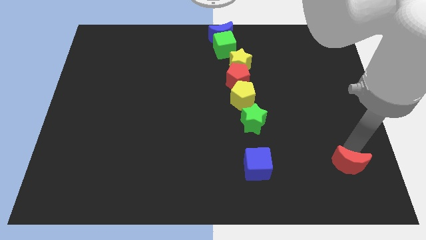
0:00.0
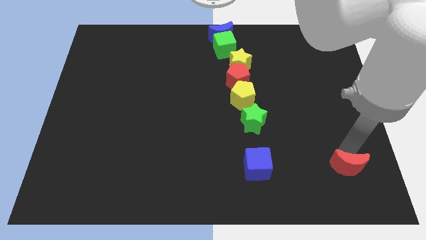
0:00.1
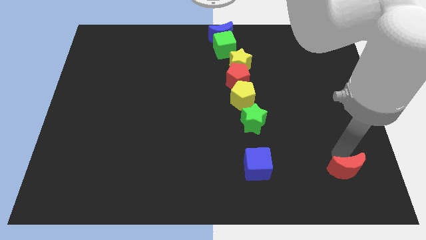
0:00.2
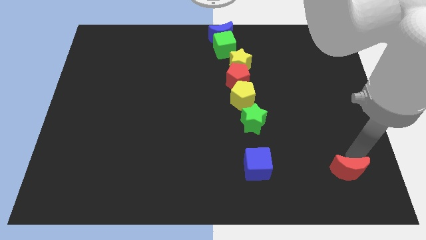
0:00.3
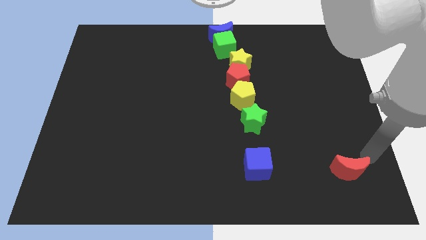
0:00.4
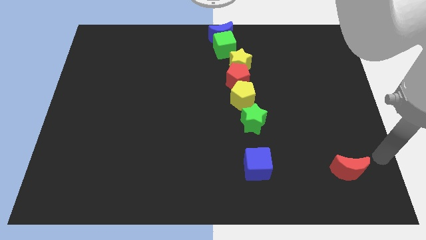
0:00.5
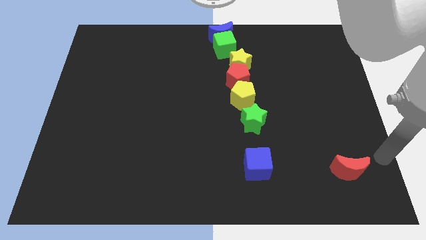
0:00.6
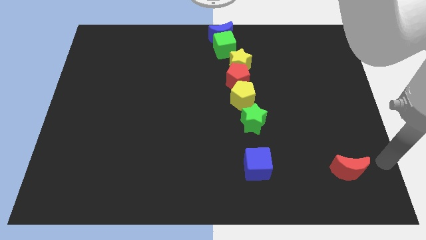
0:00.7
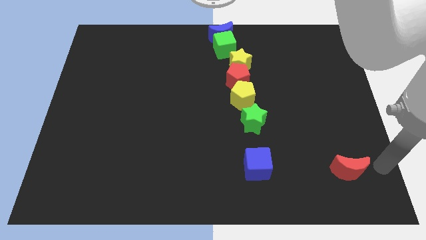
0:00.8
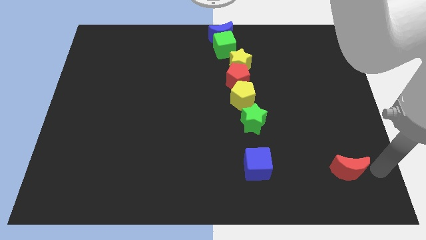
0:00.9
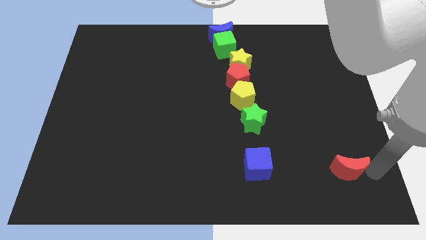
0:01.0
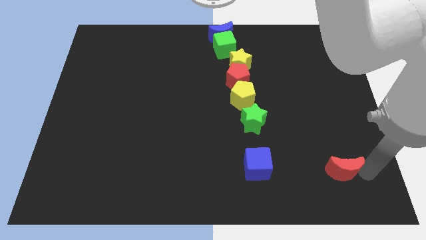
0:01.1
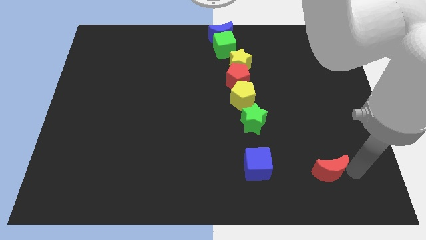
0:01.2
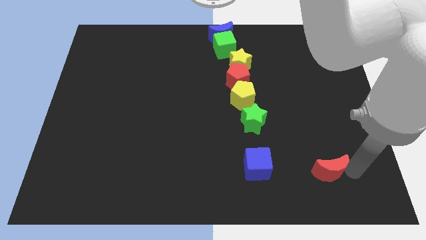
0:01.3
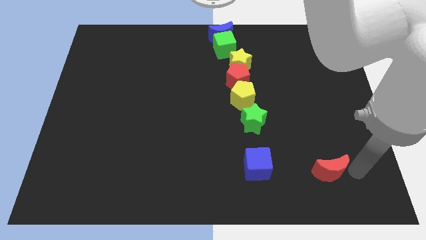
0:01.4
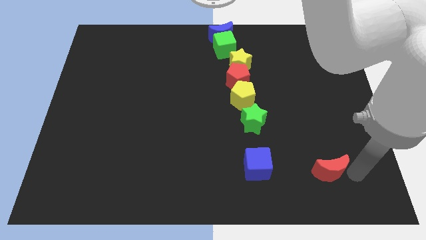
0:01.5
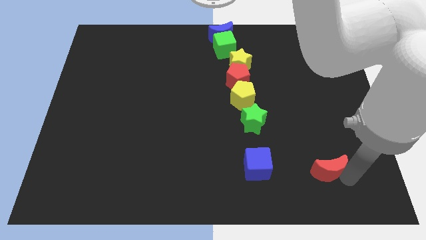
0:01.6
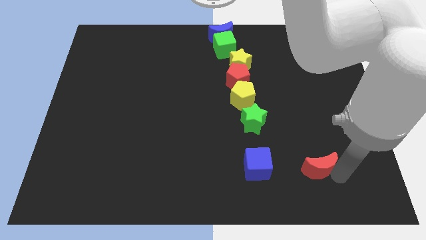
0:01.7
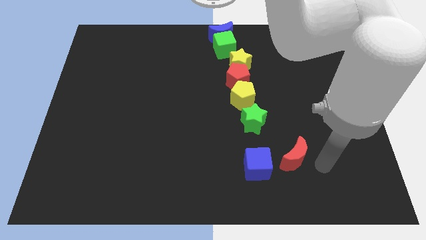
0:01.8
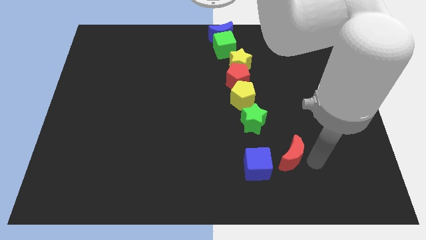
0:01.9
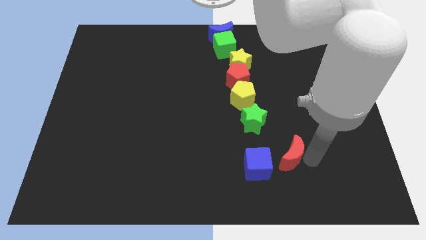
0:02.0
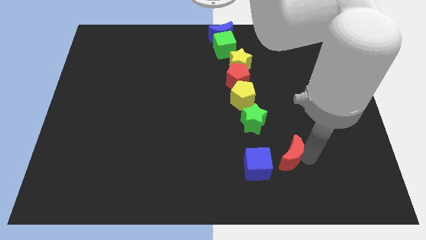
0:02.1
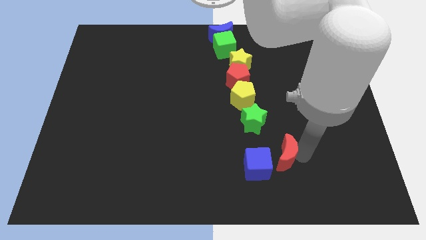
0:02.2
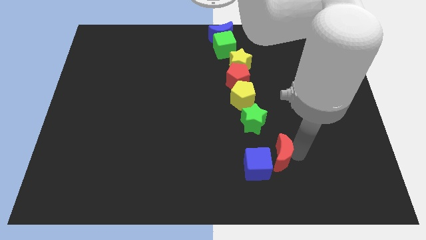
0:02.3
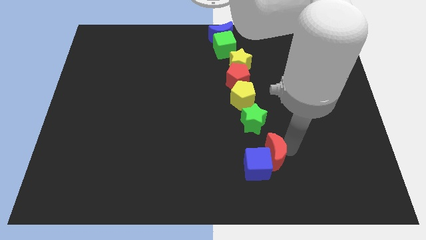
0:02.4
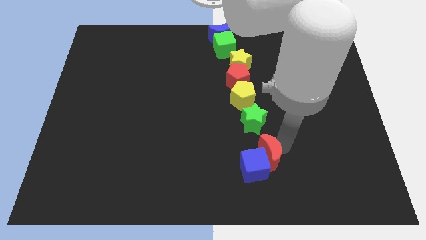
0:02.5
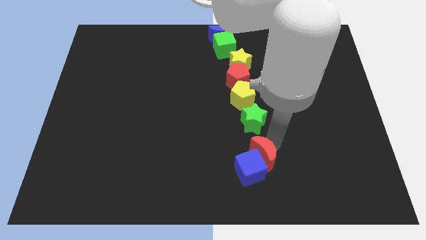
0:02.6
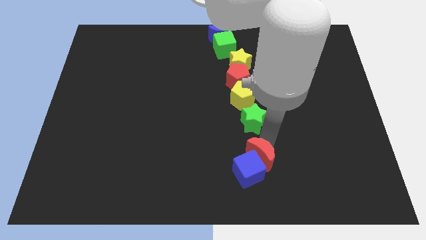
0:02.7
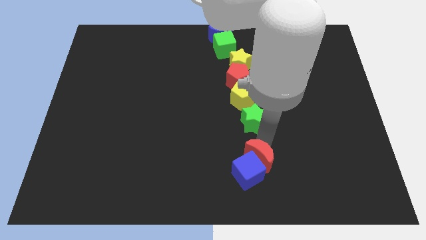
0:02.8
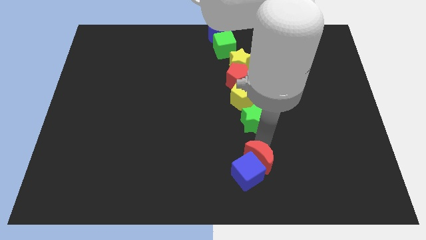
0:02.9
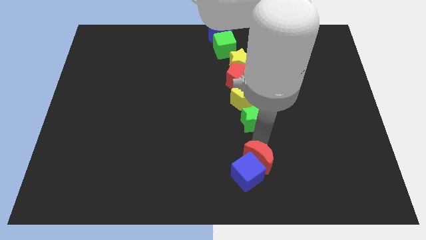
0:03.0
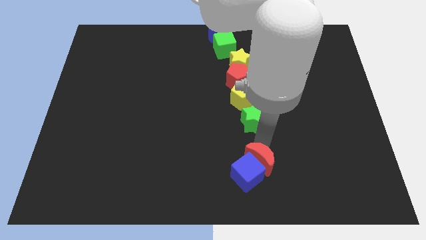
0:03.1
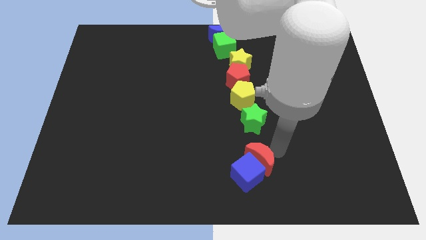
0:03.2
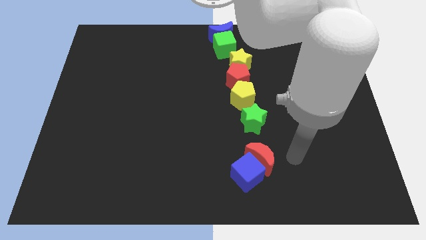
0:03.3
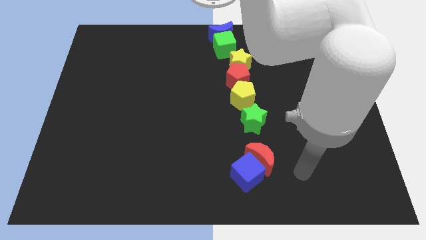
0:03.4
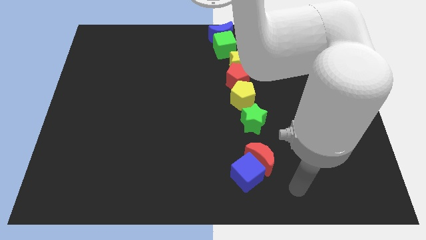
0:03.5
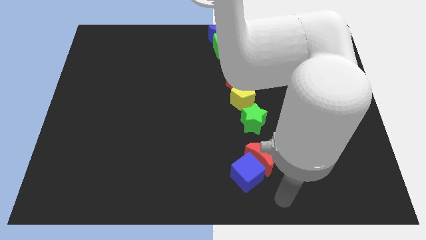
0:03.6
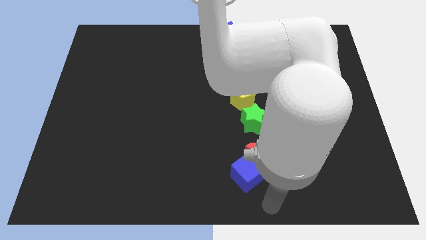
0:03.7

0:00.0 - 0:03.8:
place the blue cube and red crescent bottom side of the green star

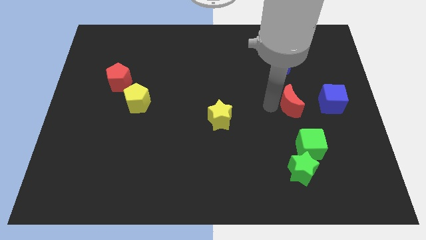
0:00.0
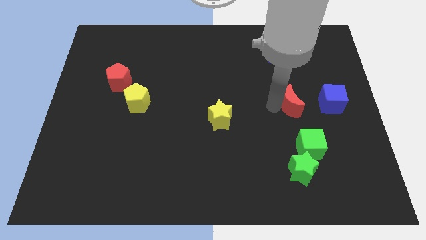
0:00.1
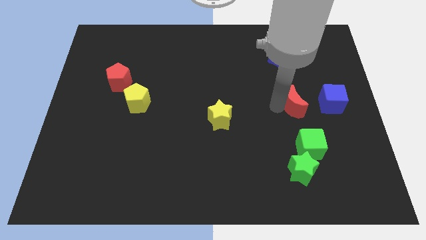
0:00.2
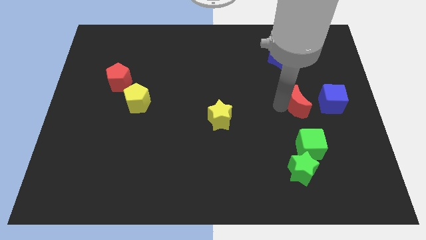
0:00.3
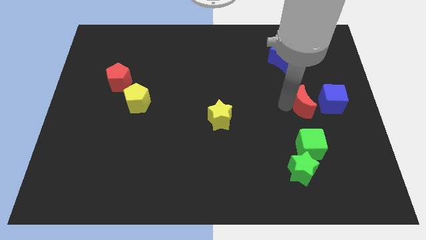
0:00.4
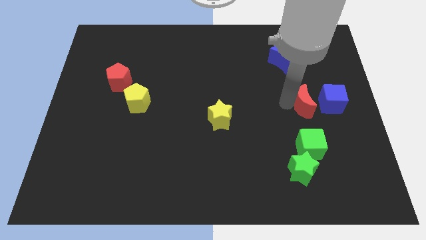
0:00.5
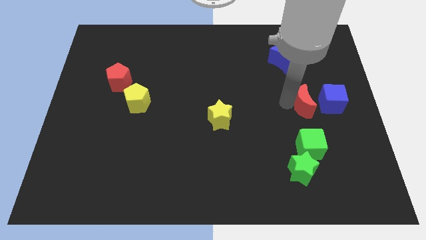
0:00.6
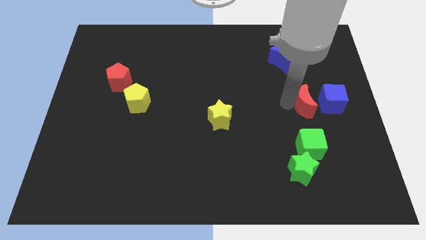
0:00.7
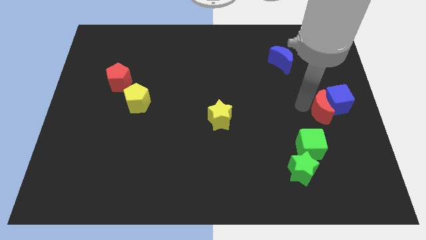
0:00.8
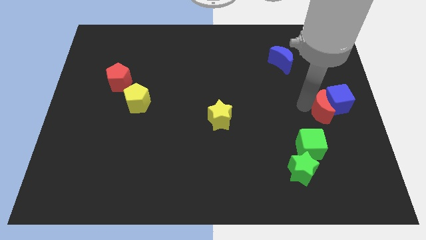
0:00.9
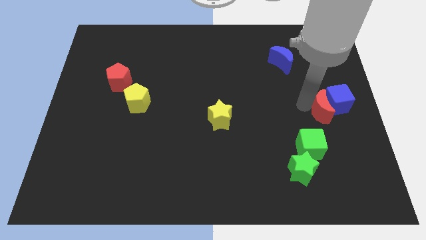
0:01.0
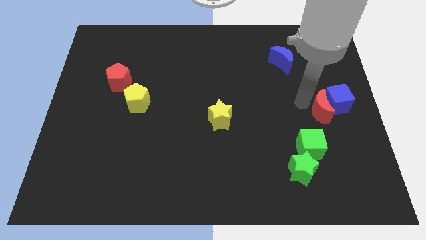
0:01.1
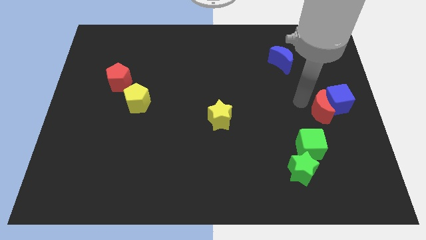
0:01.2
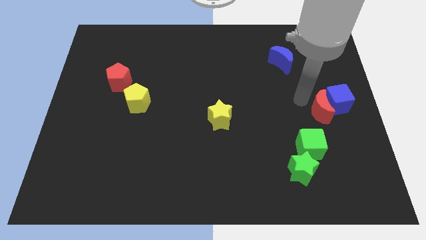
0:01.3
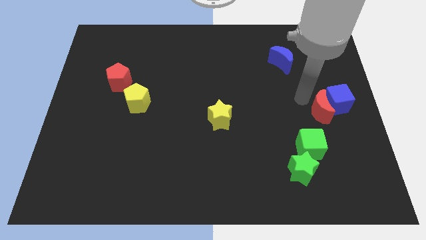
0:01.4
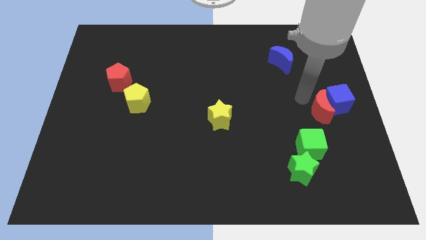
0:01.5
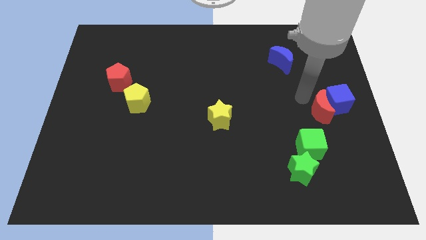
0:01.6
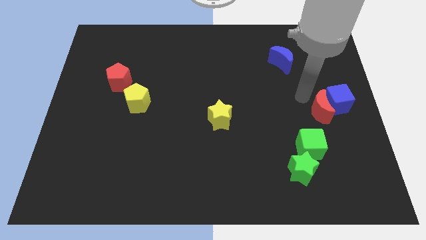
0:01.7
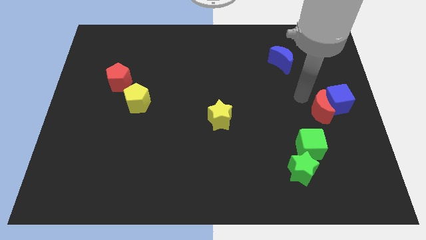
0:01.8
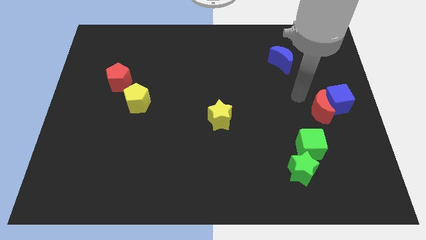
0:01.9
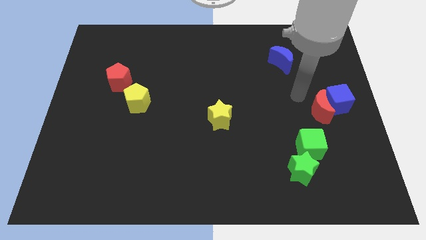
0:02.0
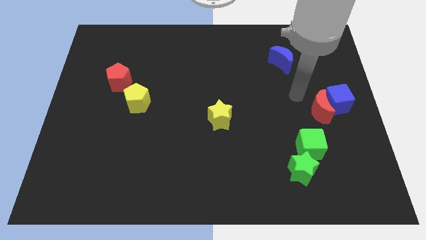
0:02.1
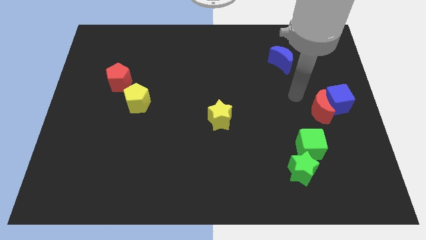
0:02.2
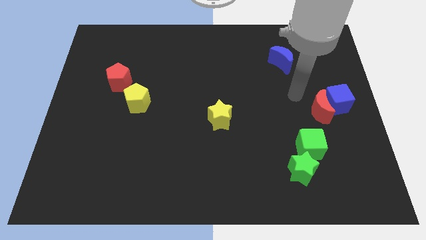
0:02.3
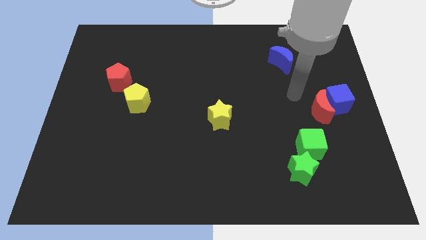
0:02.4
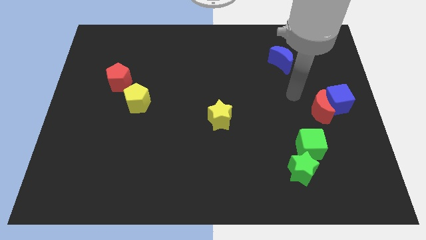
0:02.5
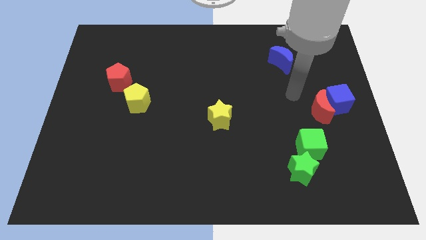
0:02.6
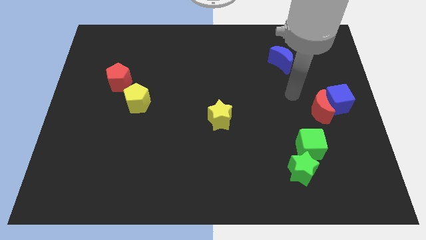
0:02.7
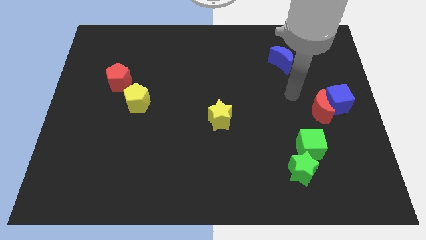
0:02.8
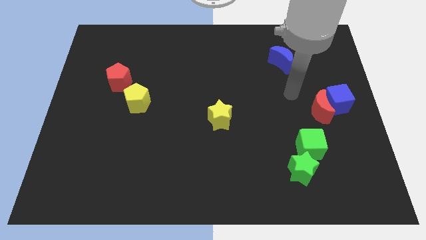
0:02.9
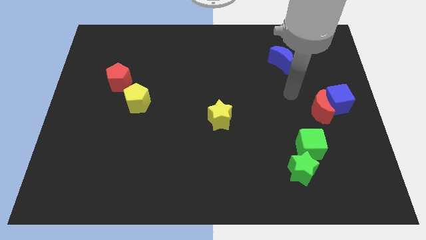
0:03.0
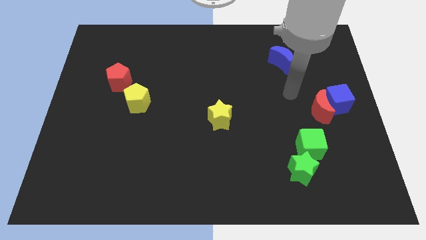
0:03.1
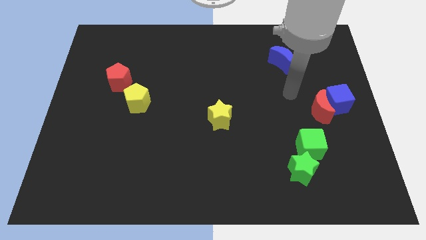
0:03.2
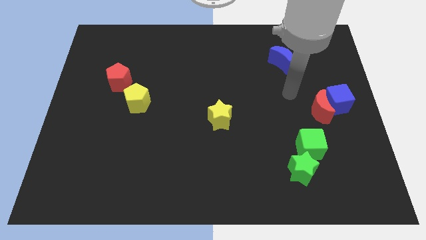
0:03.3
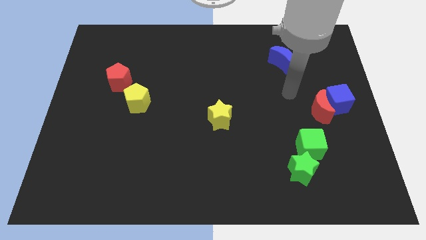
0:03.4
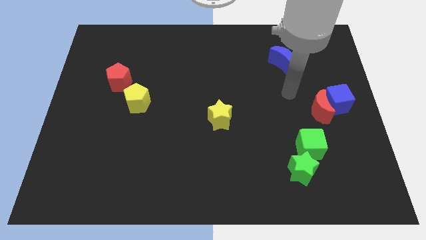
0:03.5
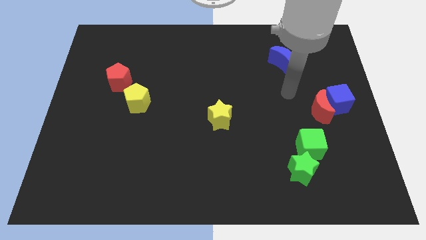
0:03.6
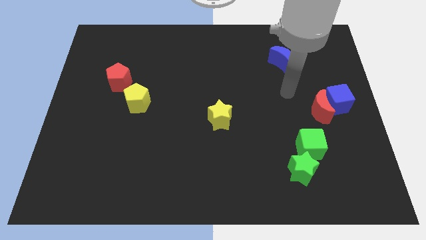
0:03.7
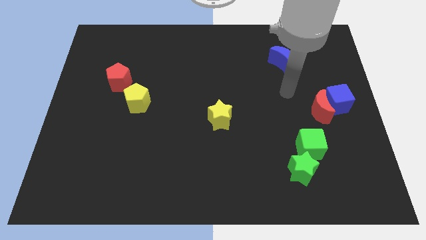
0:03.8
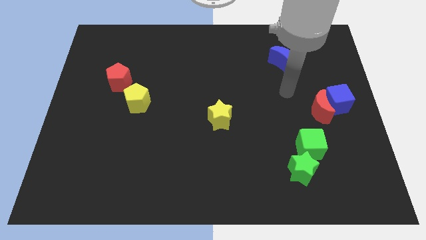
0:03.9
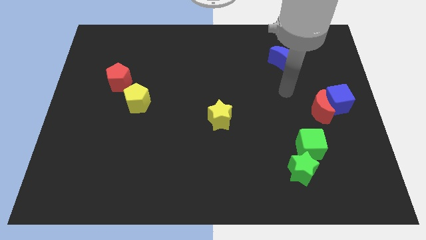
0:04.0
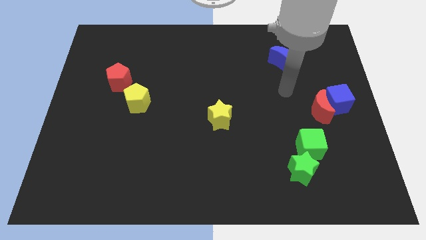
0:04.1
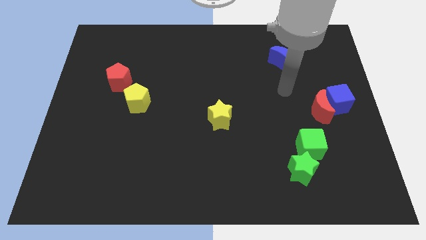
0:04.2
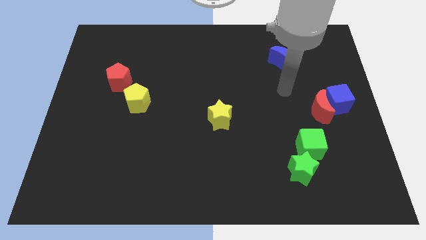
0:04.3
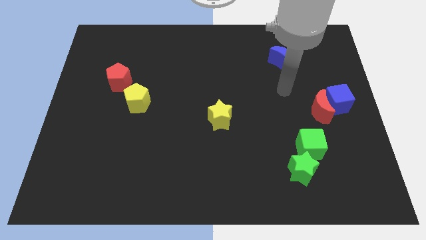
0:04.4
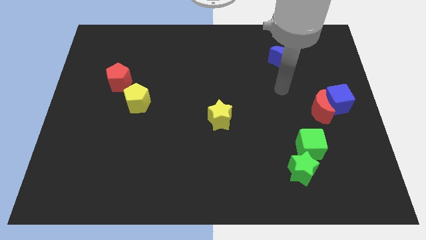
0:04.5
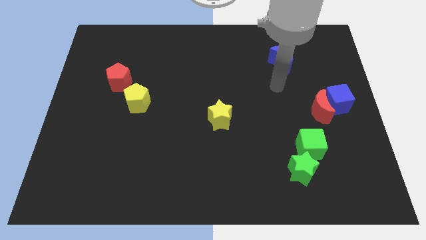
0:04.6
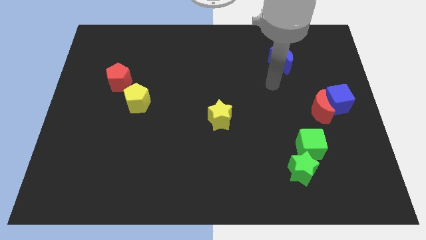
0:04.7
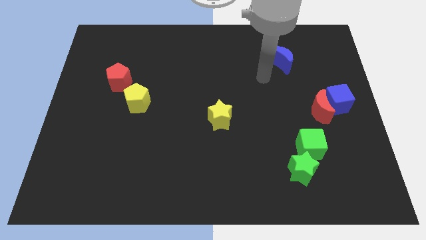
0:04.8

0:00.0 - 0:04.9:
push the red crescent into the blue cube

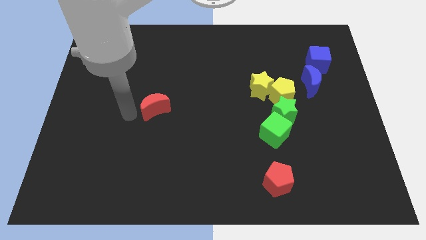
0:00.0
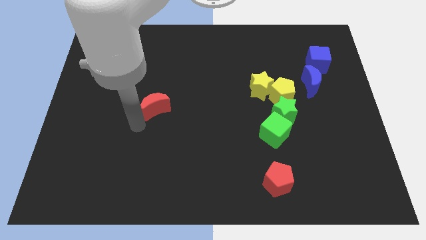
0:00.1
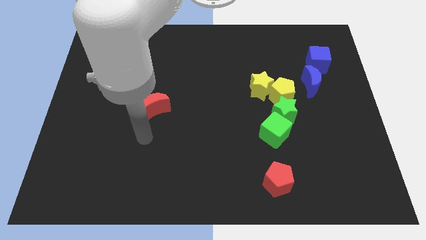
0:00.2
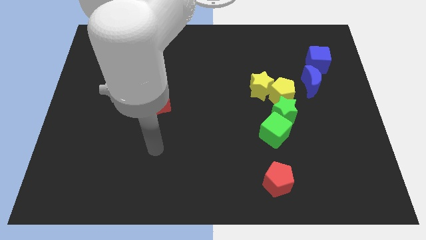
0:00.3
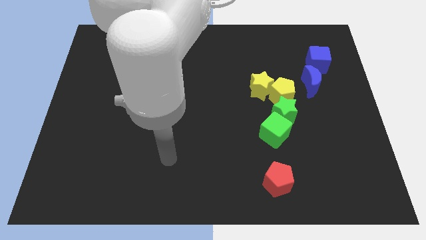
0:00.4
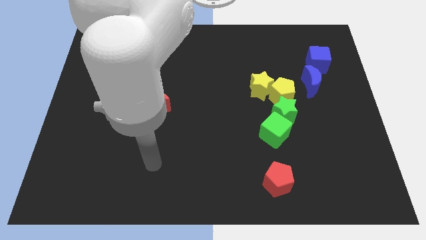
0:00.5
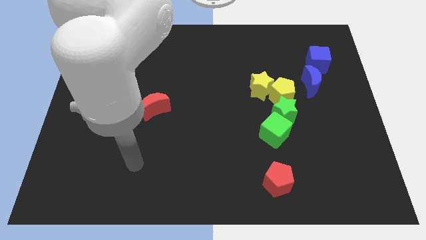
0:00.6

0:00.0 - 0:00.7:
move arm away from the red moon
